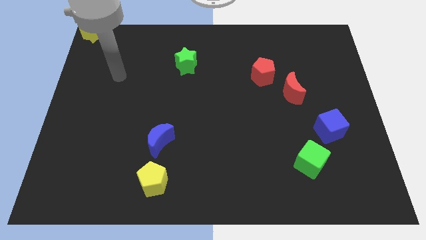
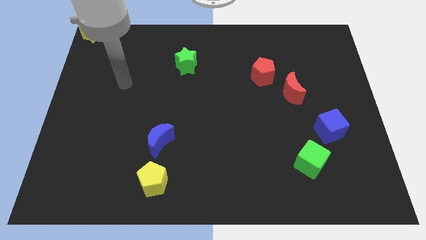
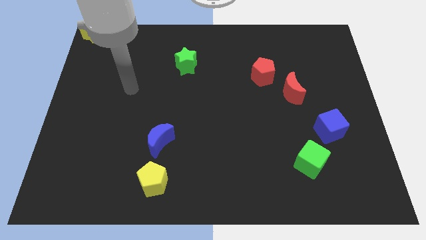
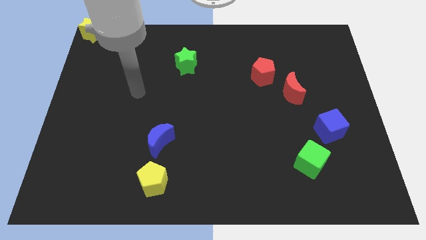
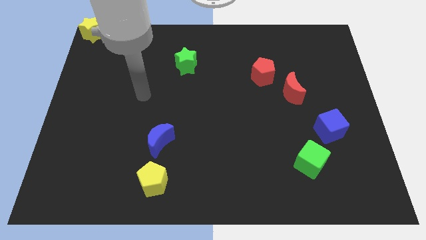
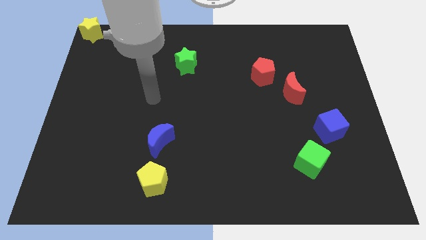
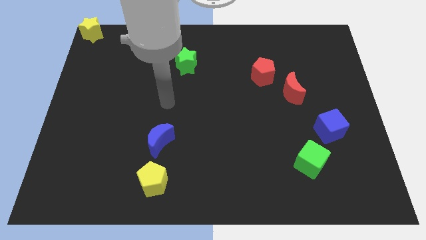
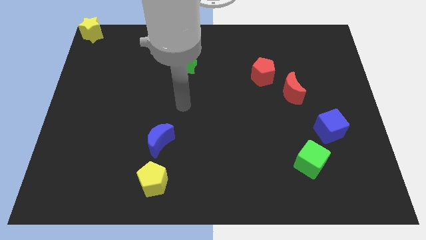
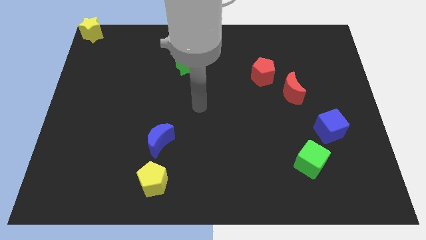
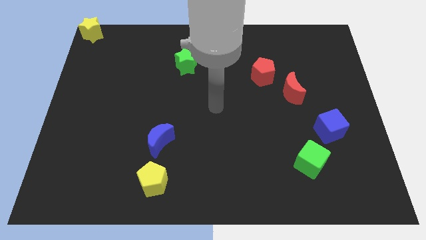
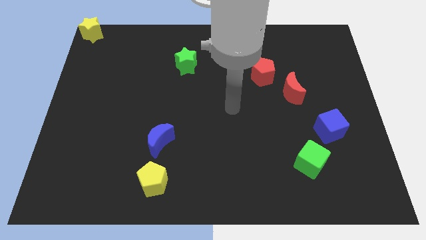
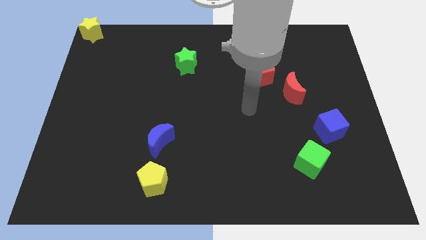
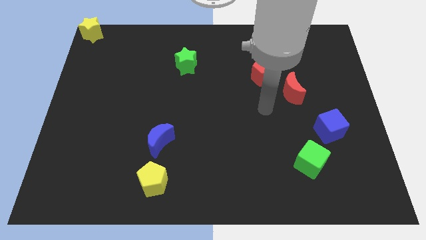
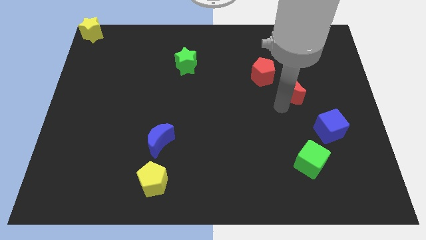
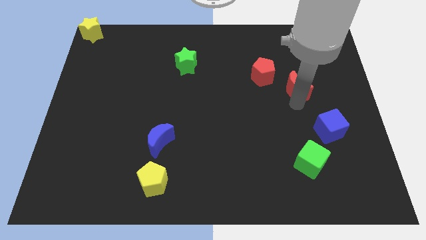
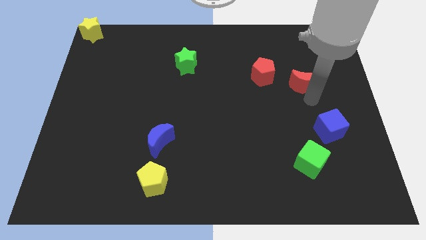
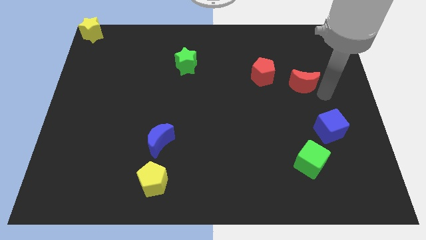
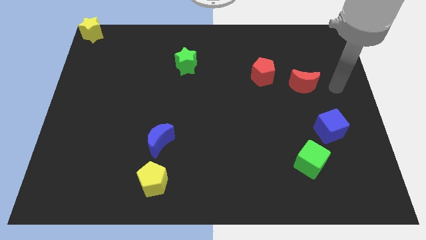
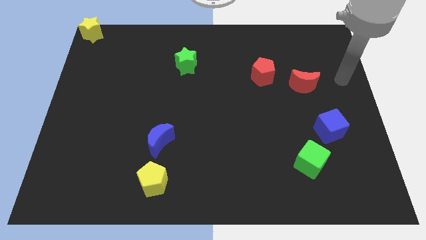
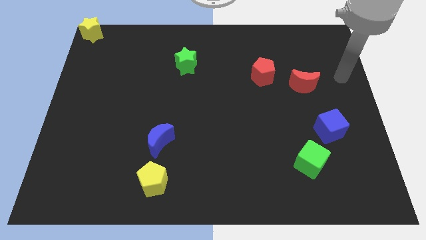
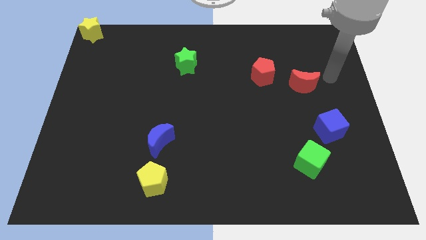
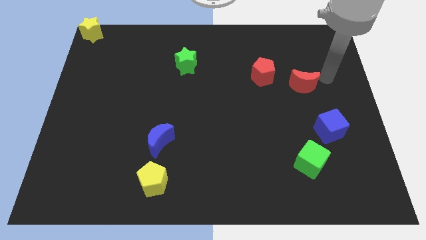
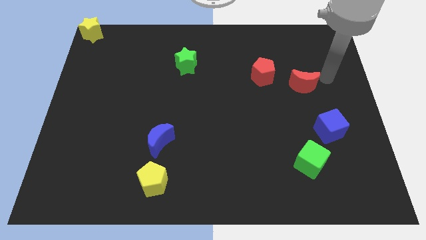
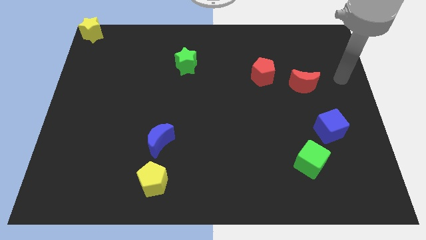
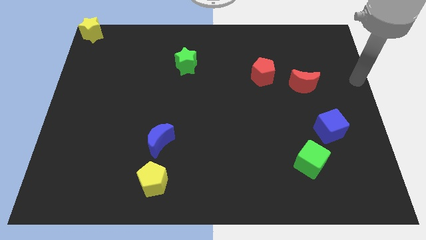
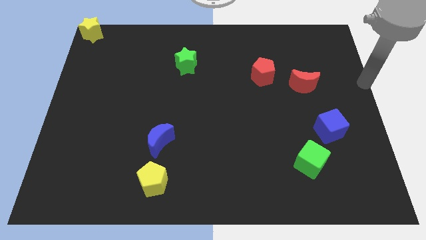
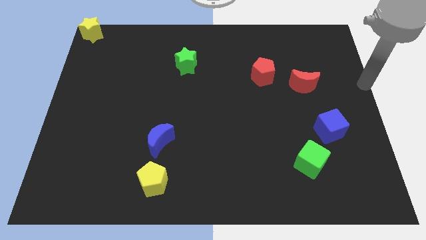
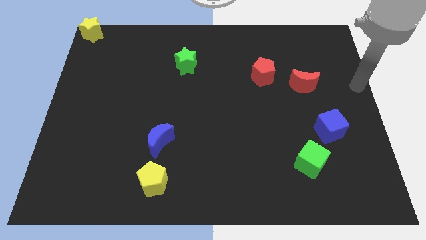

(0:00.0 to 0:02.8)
slightly turn the red moon and point to the right side

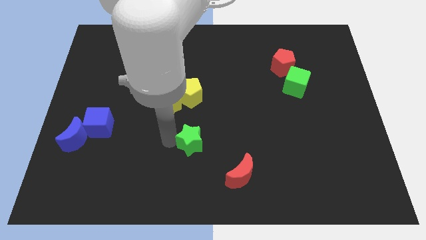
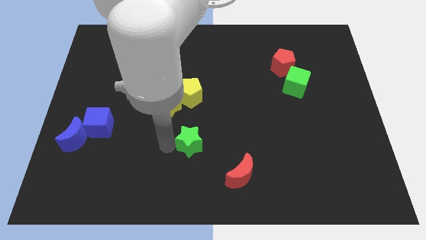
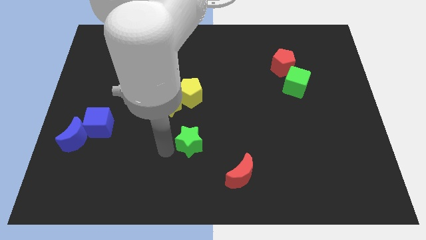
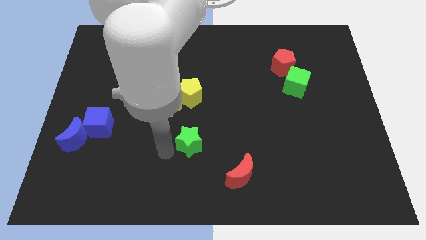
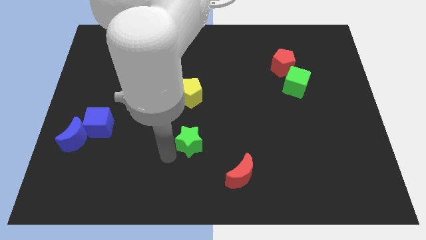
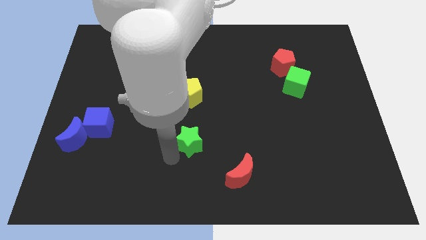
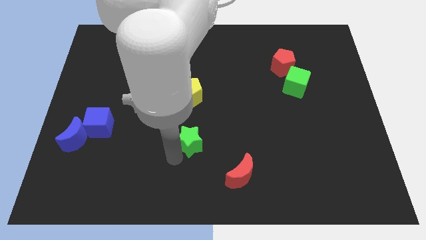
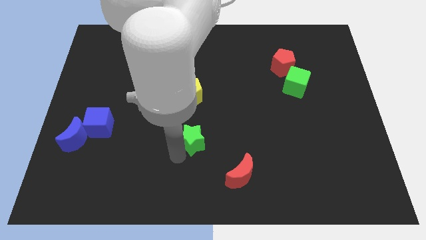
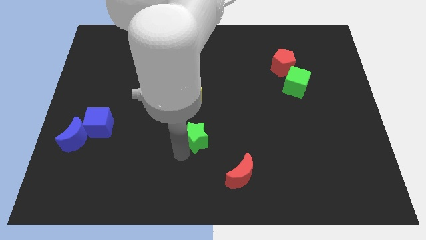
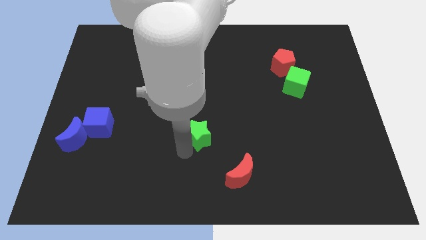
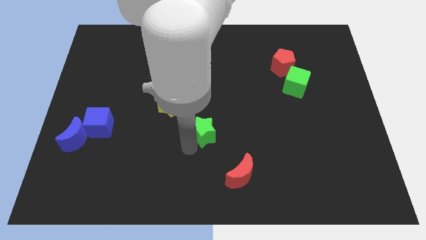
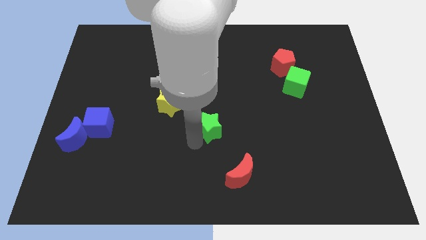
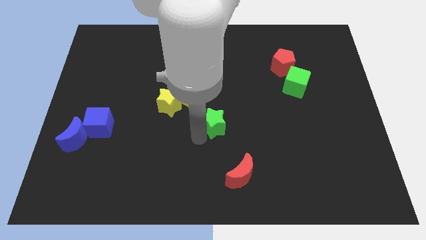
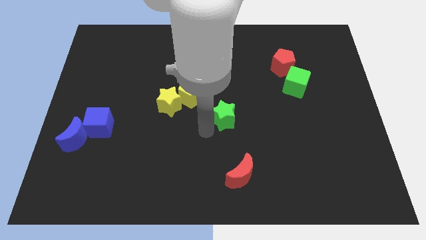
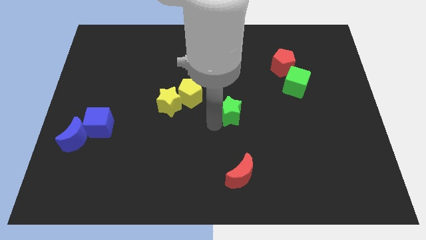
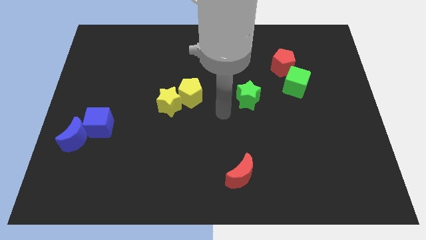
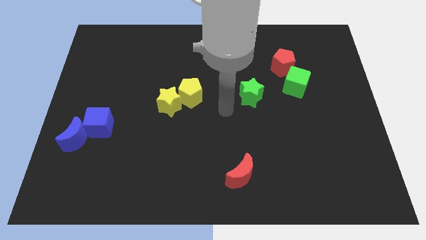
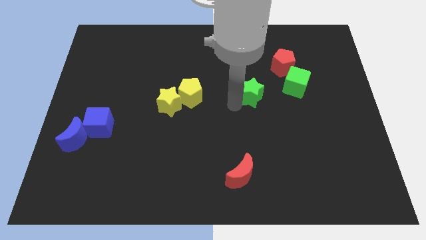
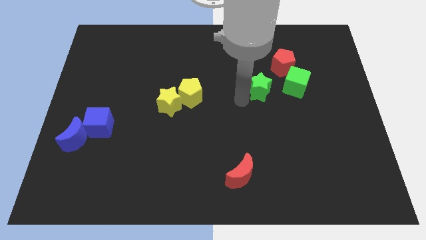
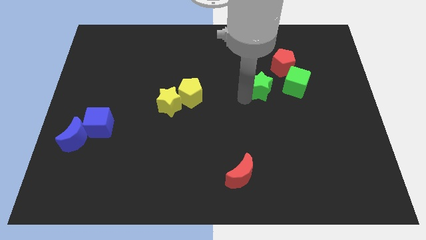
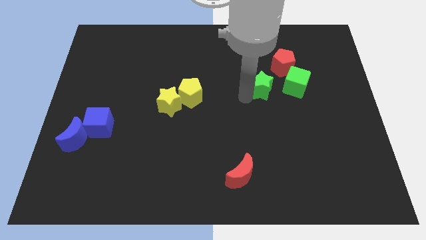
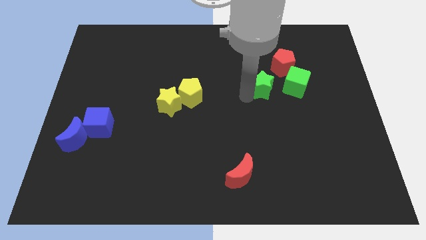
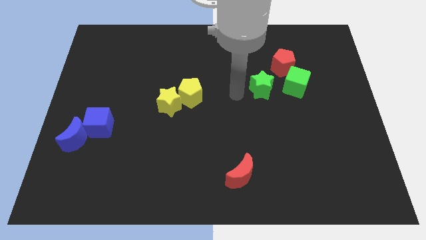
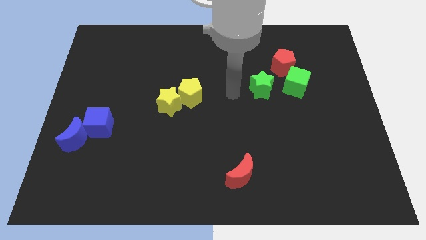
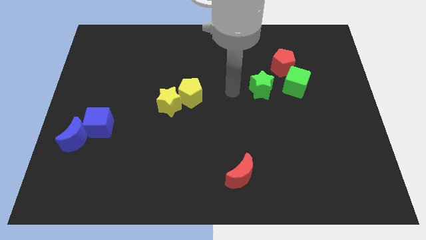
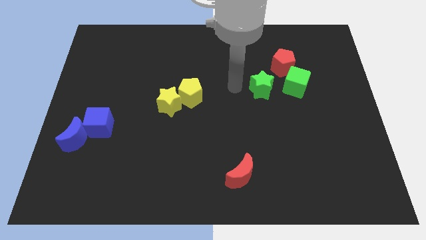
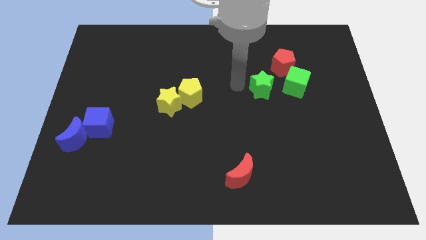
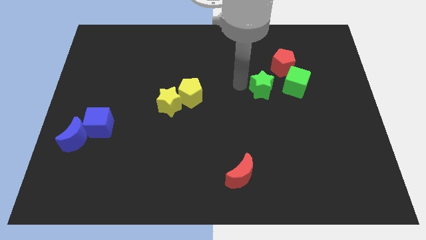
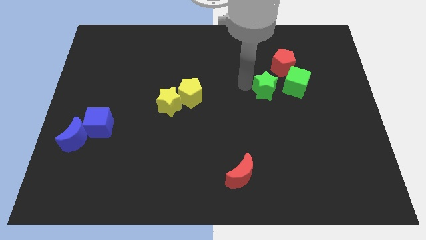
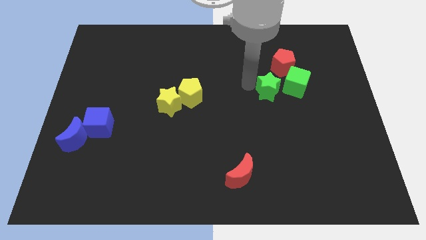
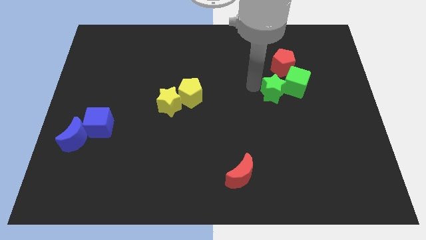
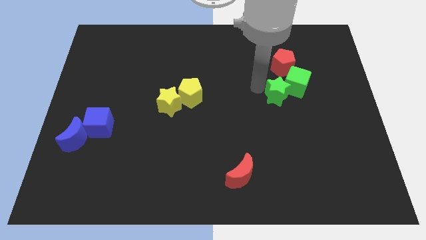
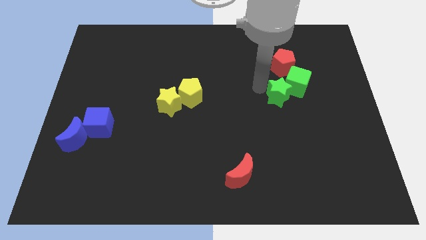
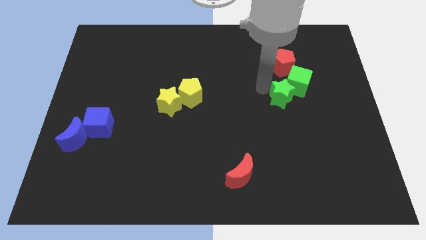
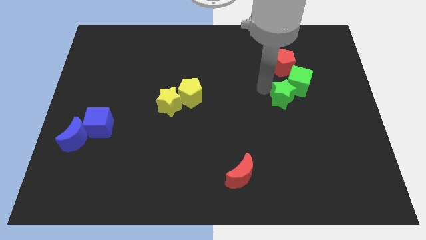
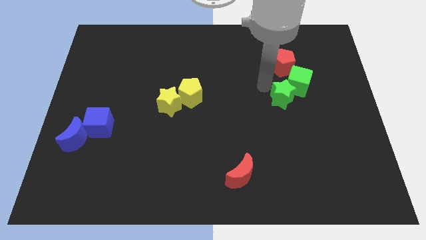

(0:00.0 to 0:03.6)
move the green star into the green cube

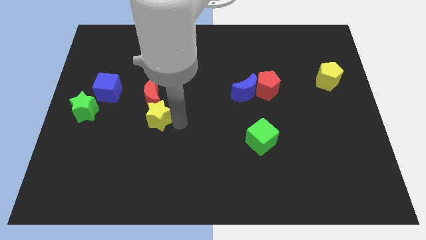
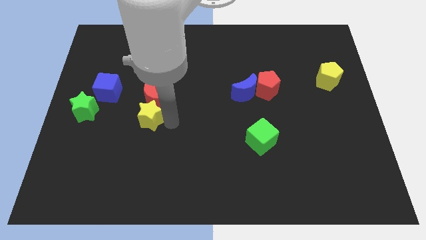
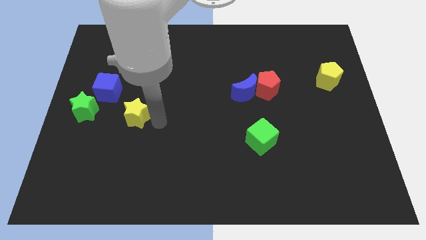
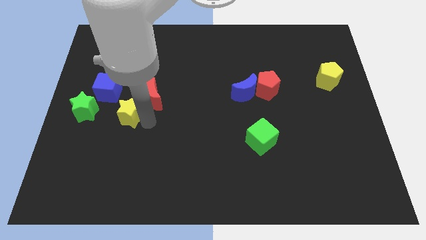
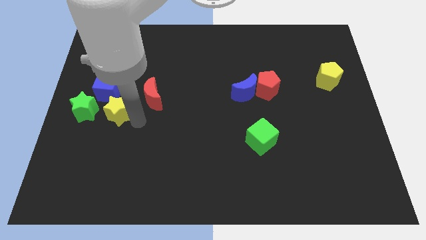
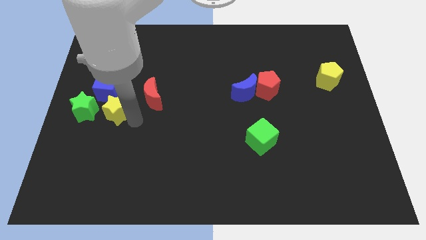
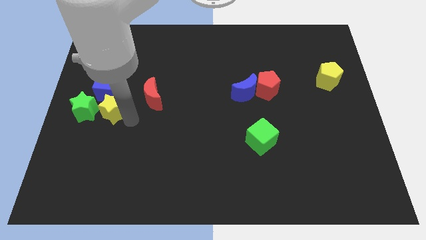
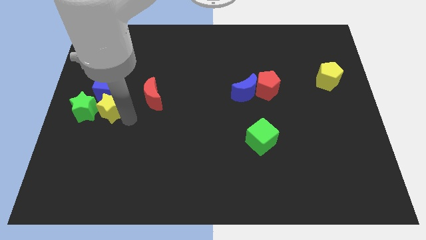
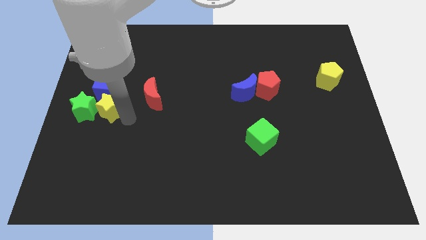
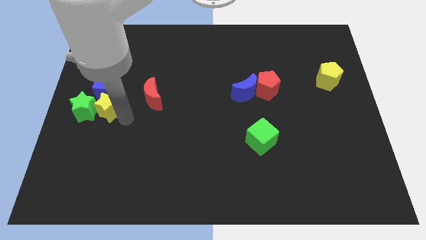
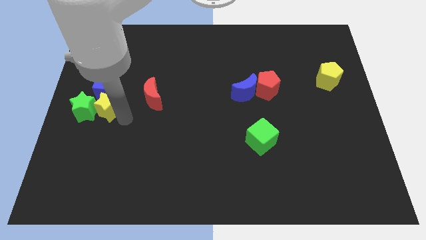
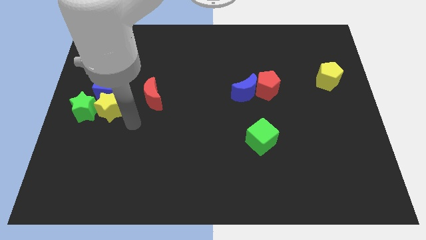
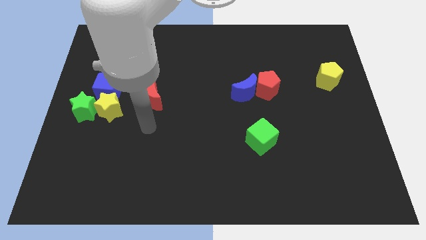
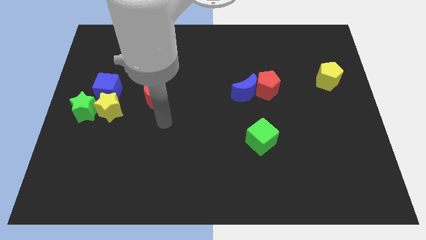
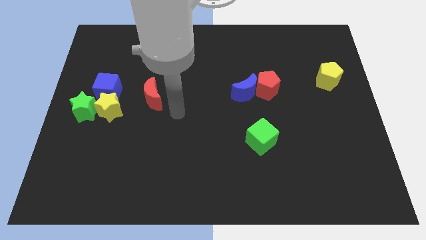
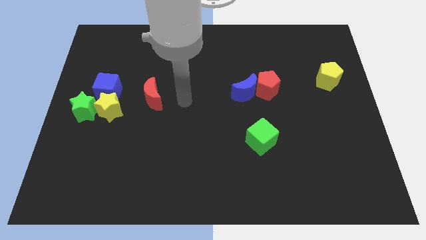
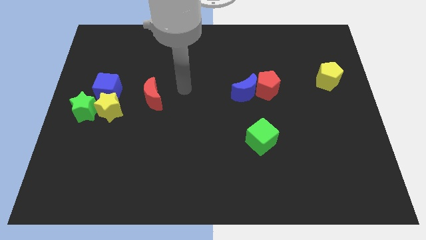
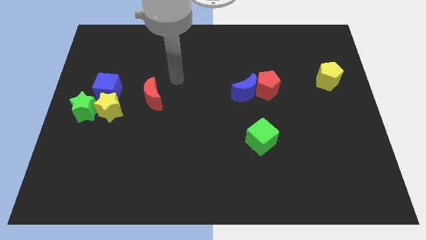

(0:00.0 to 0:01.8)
move the yellow star to the right side of the green star

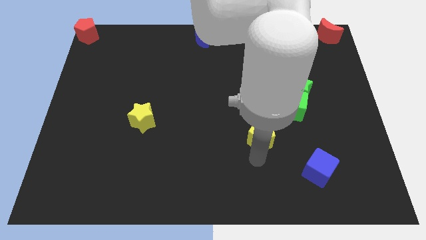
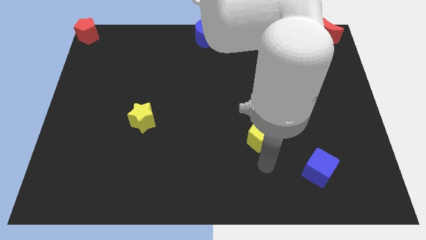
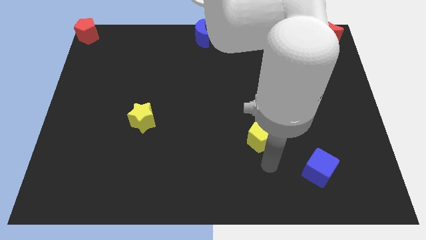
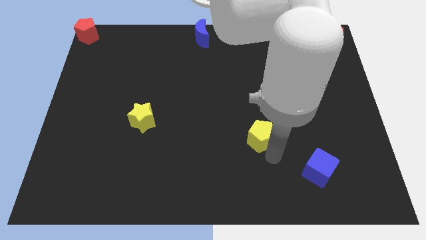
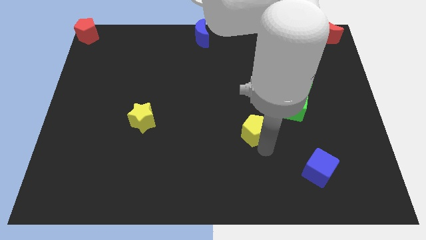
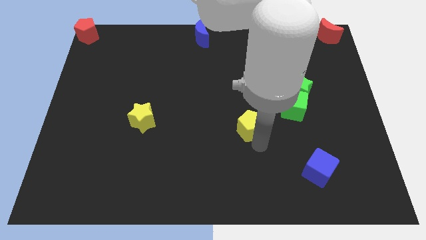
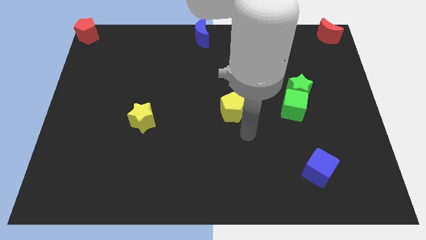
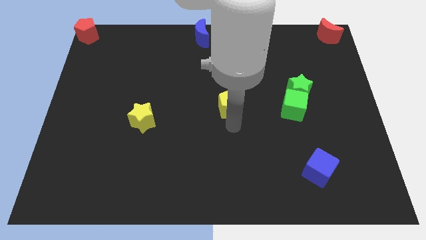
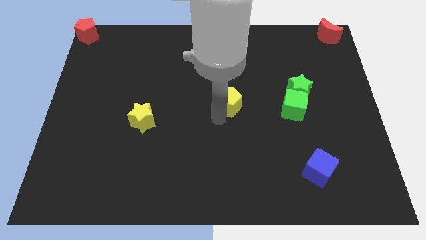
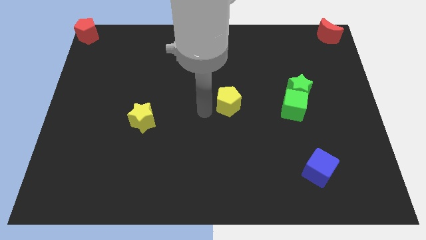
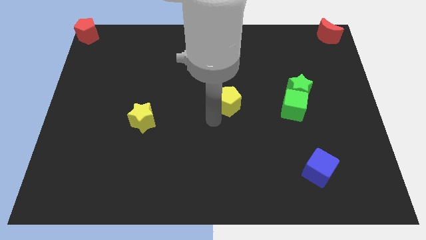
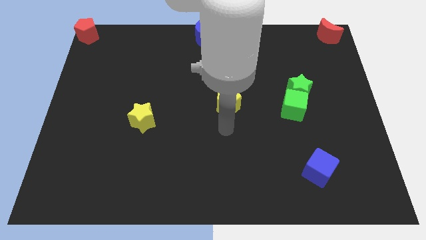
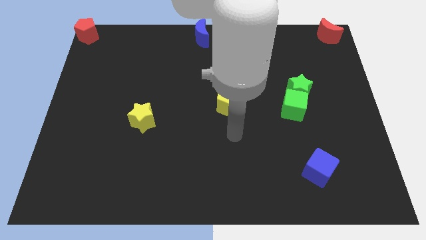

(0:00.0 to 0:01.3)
slide the yellow pentagon to the center of the board
